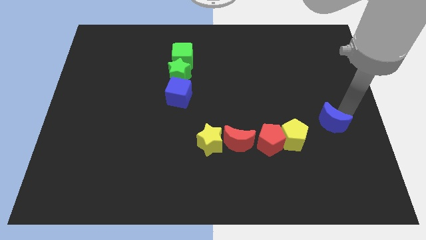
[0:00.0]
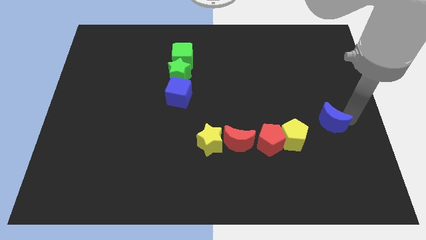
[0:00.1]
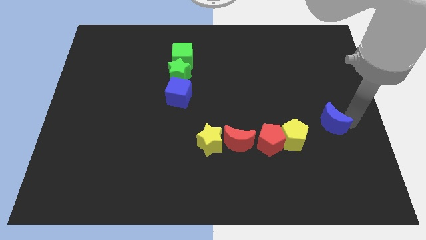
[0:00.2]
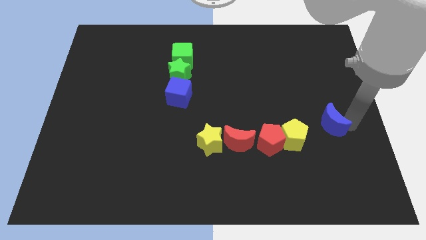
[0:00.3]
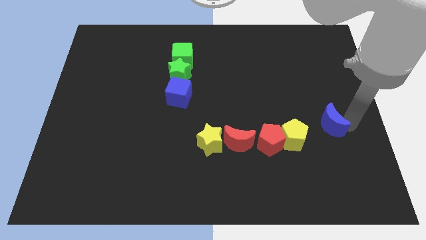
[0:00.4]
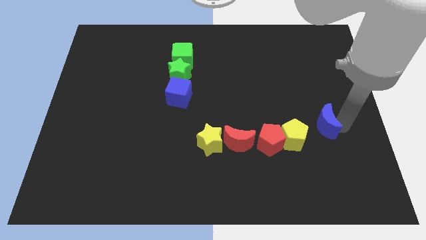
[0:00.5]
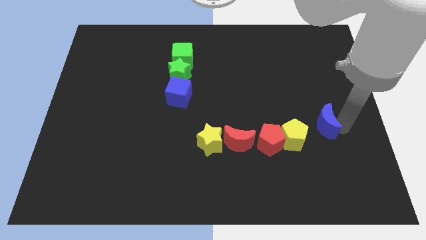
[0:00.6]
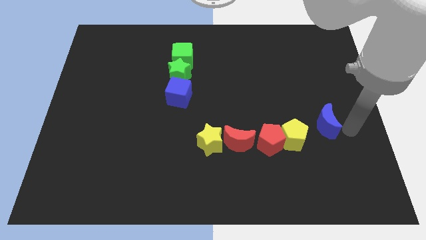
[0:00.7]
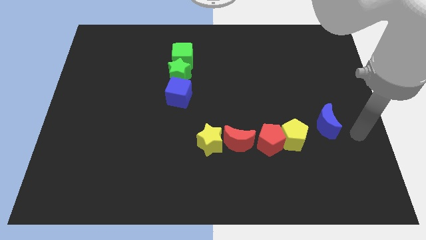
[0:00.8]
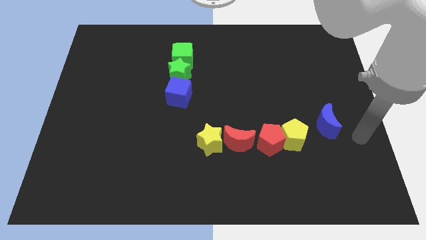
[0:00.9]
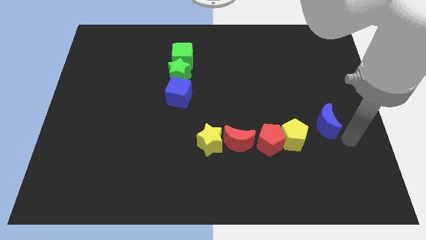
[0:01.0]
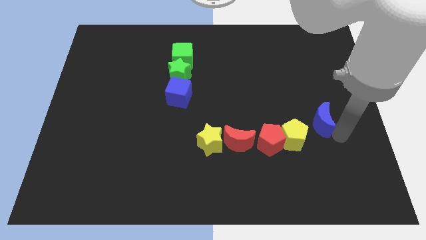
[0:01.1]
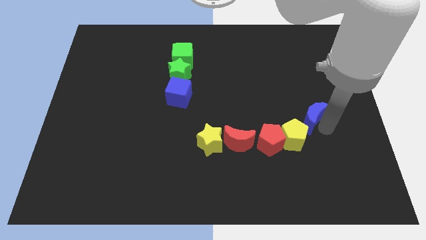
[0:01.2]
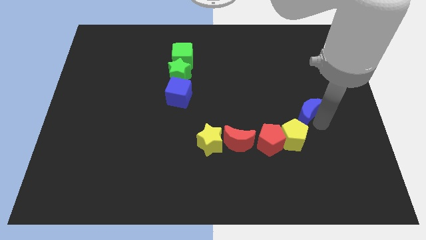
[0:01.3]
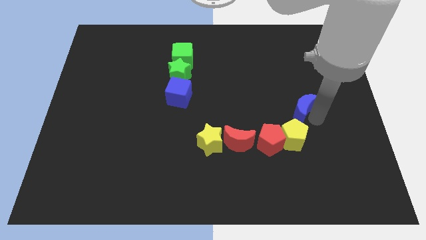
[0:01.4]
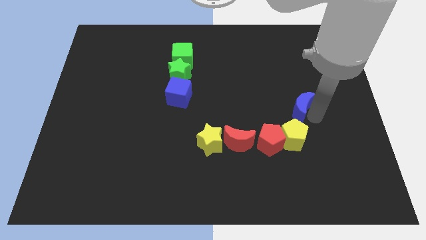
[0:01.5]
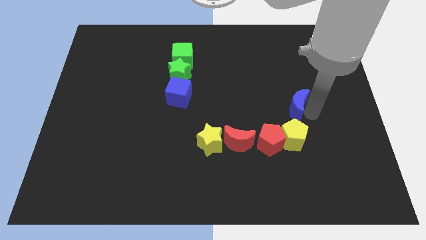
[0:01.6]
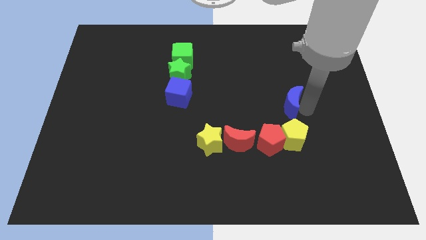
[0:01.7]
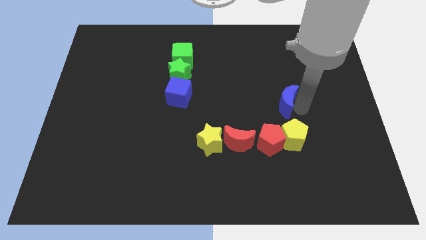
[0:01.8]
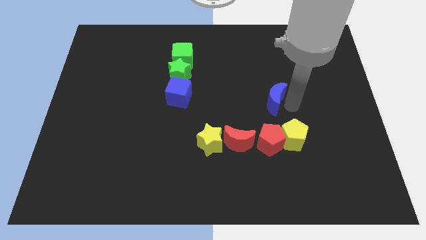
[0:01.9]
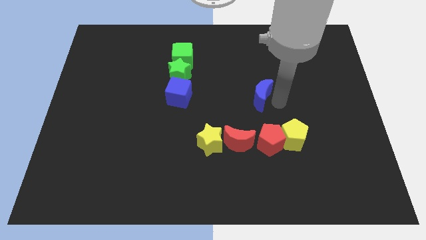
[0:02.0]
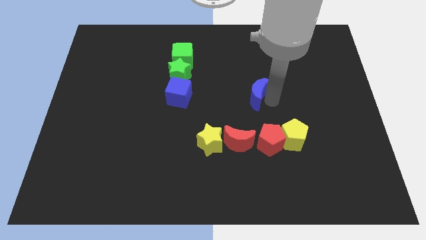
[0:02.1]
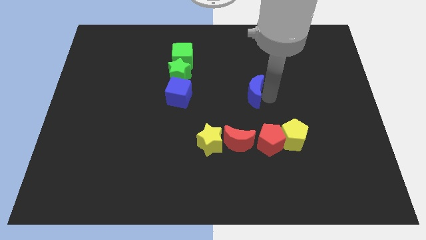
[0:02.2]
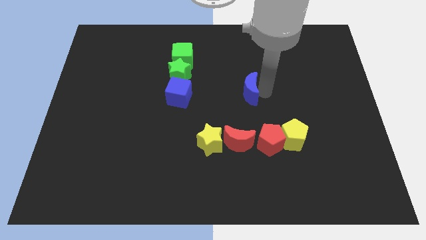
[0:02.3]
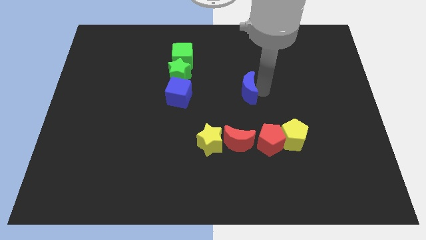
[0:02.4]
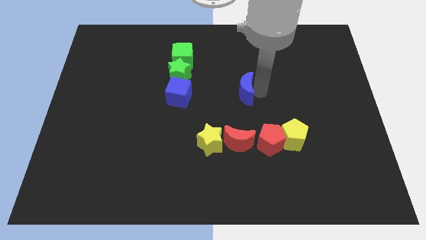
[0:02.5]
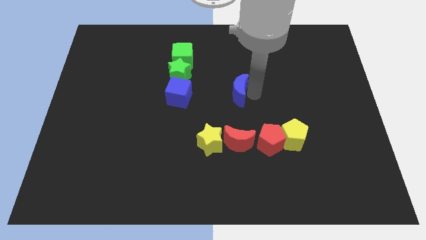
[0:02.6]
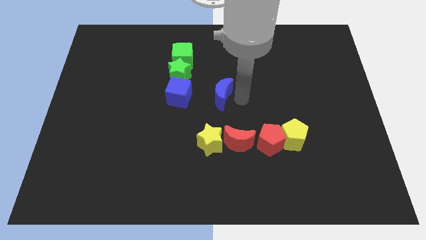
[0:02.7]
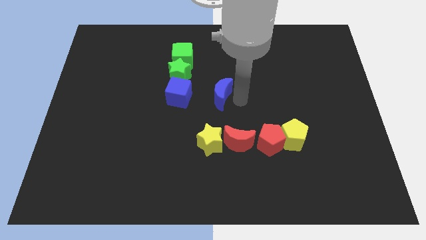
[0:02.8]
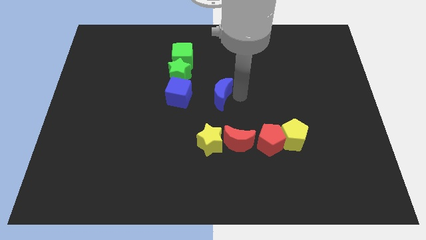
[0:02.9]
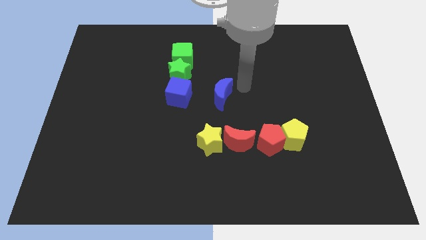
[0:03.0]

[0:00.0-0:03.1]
move the blue crescent to the center of the board

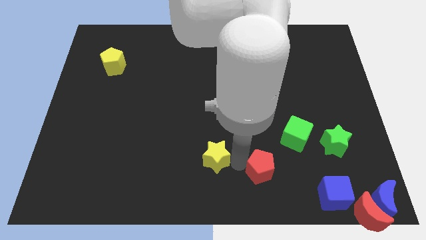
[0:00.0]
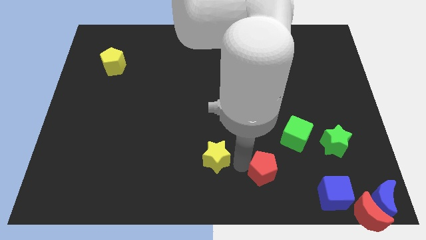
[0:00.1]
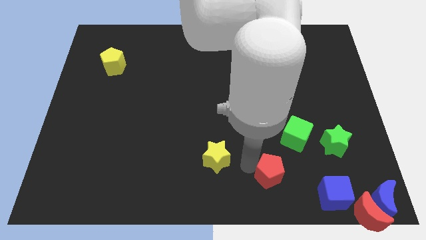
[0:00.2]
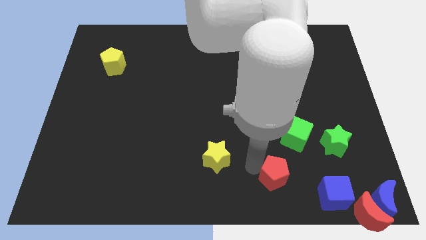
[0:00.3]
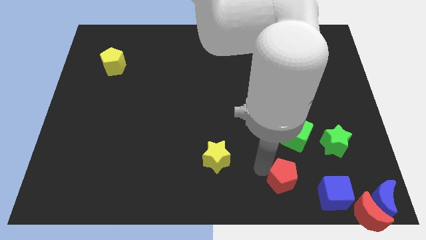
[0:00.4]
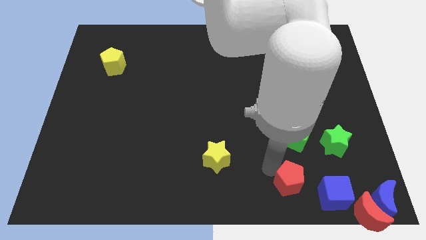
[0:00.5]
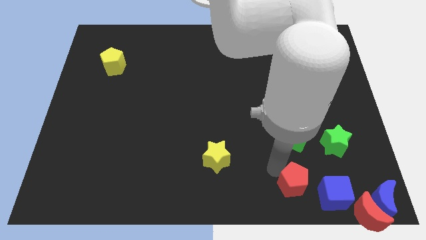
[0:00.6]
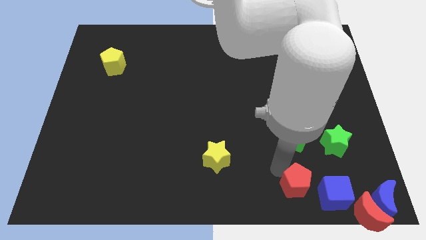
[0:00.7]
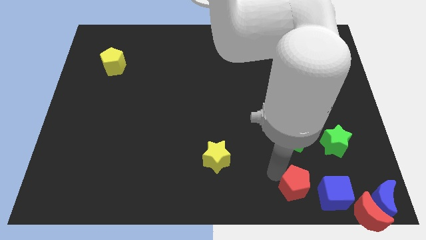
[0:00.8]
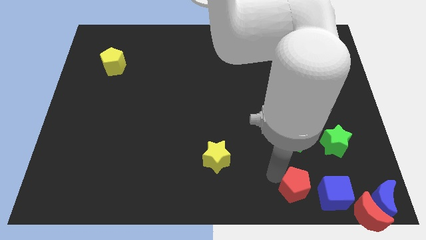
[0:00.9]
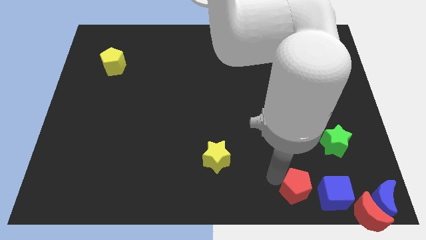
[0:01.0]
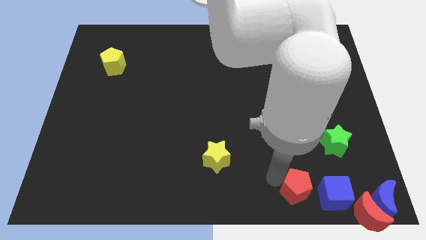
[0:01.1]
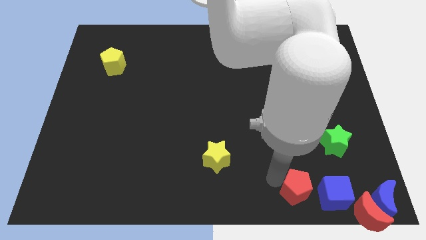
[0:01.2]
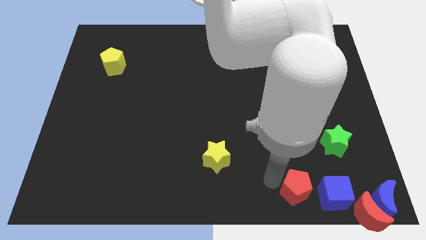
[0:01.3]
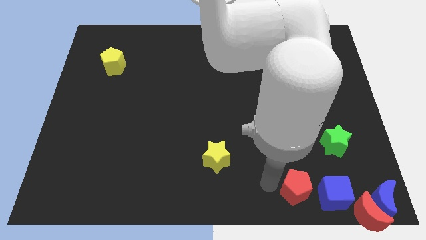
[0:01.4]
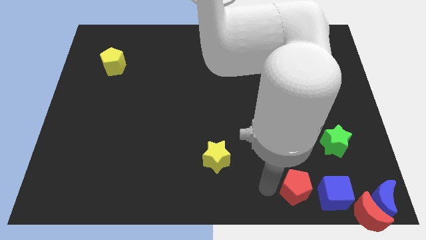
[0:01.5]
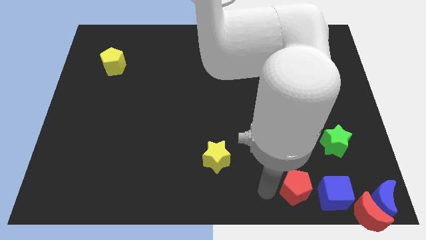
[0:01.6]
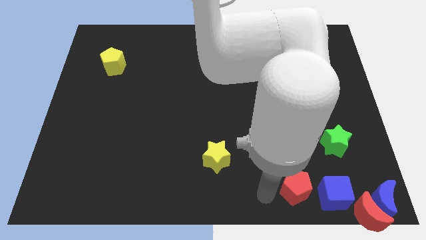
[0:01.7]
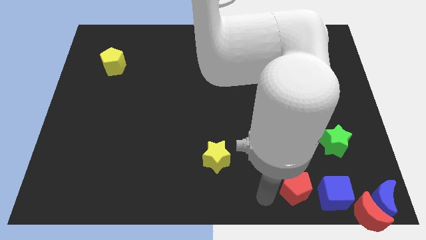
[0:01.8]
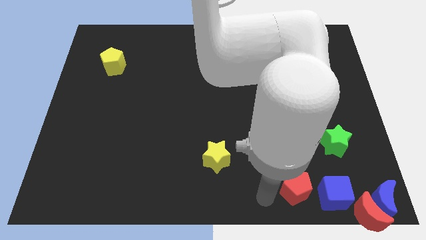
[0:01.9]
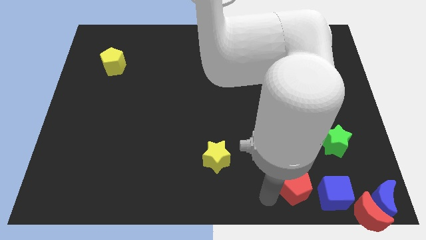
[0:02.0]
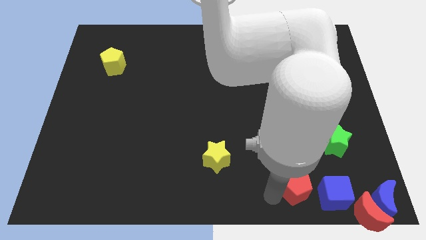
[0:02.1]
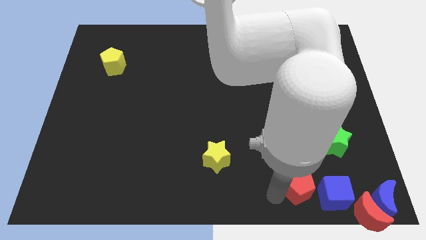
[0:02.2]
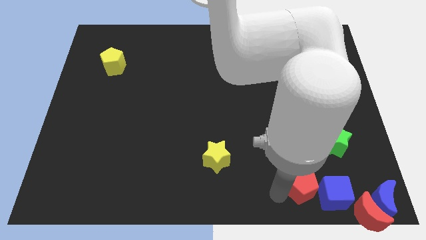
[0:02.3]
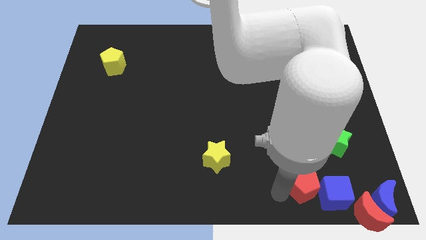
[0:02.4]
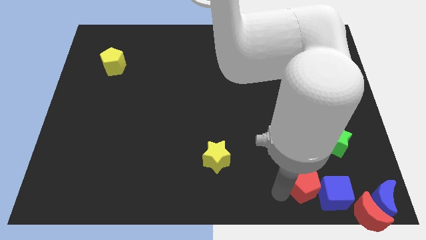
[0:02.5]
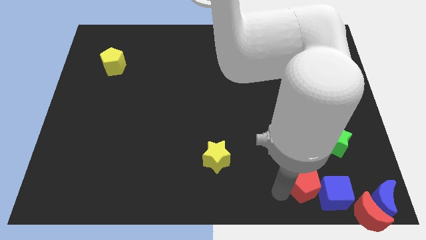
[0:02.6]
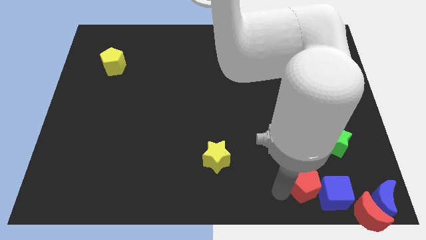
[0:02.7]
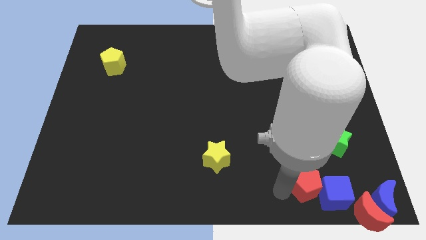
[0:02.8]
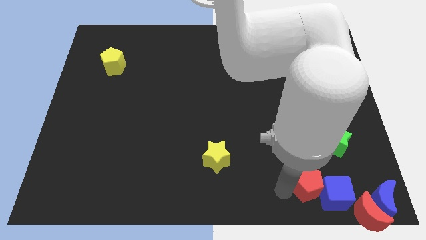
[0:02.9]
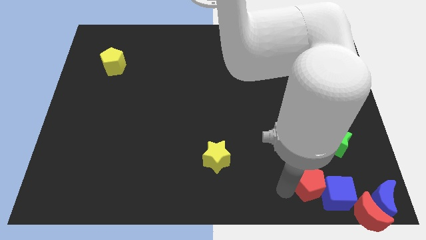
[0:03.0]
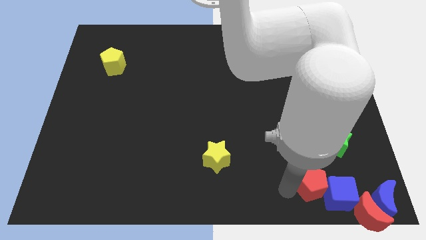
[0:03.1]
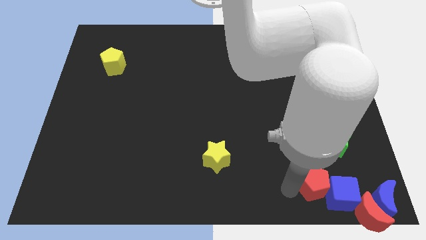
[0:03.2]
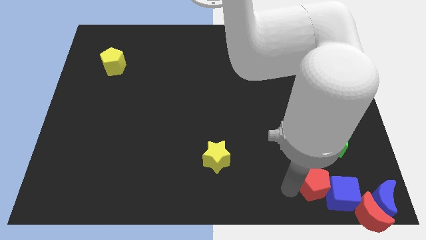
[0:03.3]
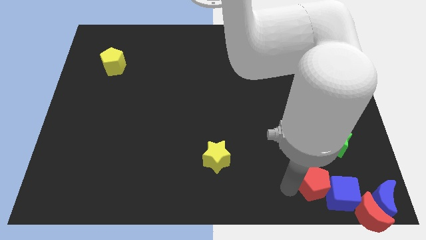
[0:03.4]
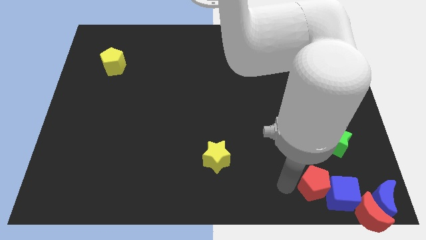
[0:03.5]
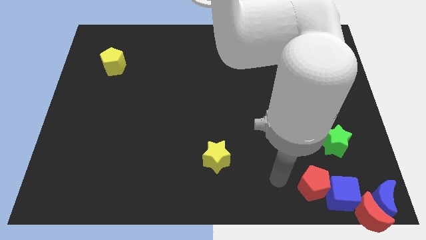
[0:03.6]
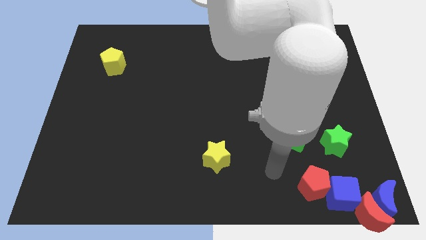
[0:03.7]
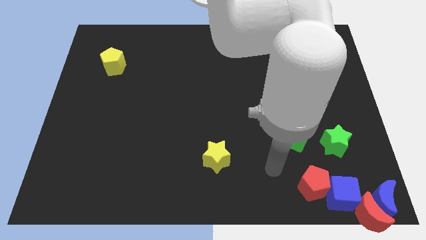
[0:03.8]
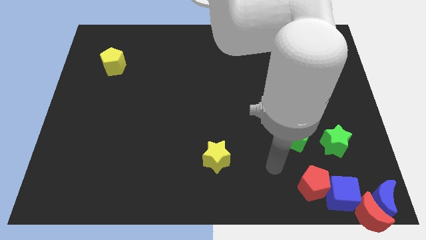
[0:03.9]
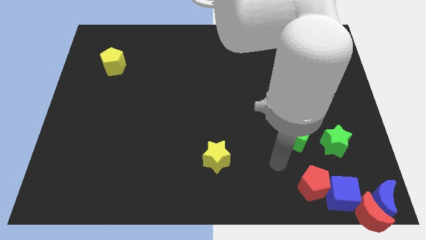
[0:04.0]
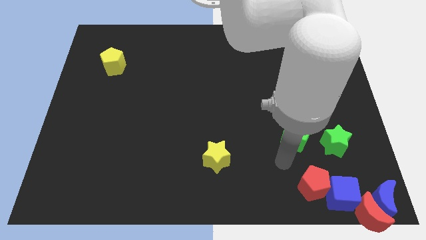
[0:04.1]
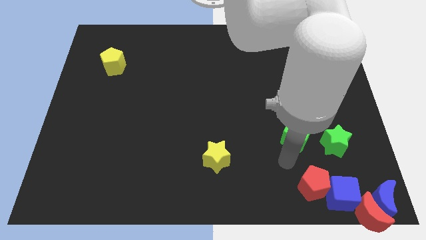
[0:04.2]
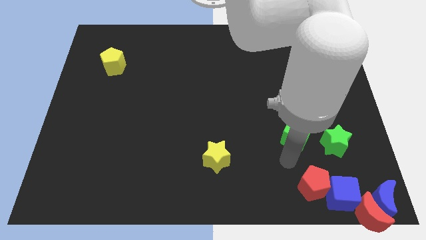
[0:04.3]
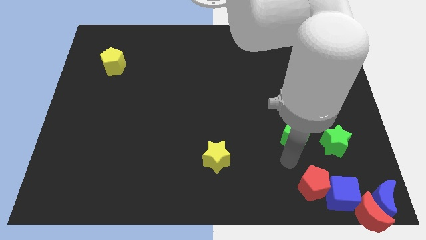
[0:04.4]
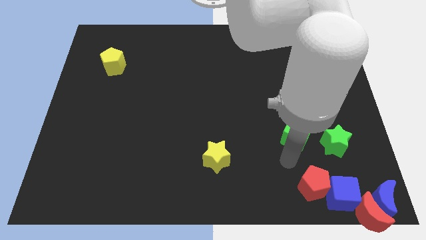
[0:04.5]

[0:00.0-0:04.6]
push the red pentagon into the blue cube

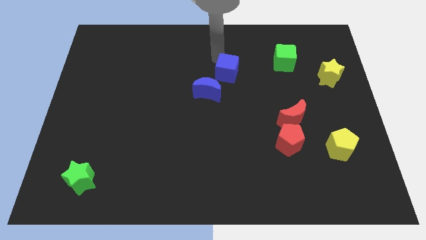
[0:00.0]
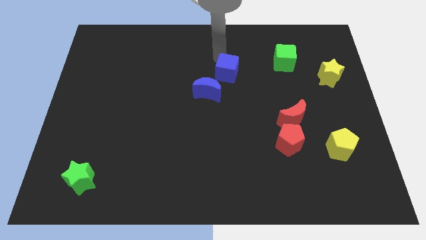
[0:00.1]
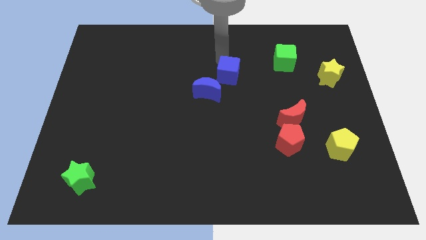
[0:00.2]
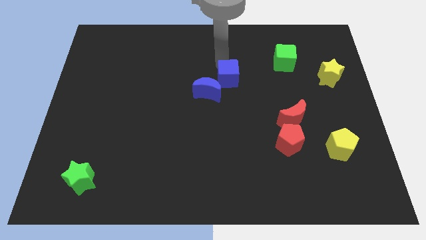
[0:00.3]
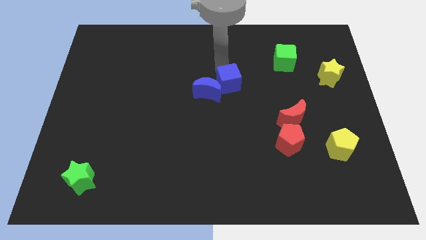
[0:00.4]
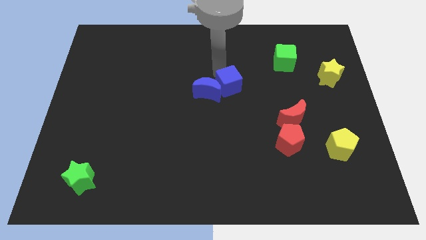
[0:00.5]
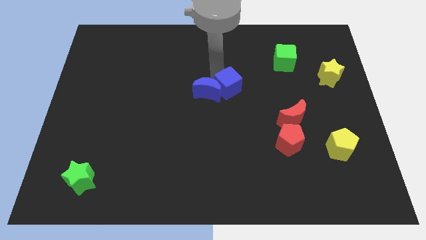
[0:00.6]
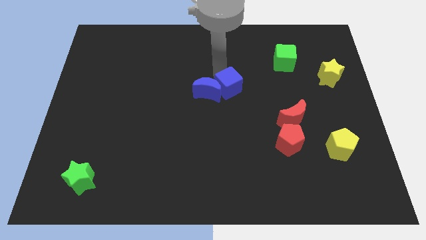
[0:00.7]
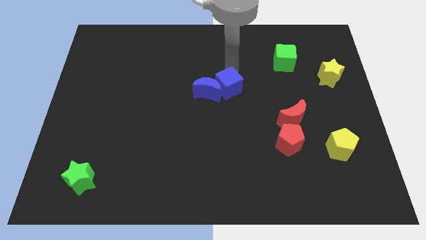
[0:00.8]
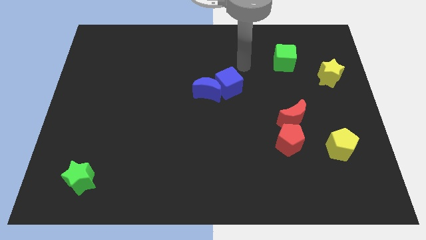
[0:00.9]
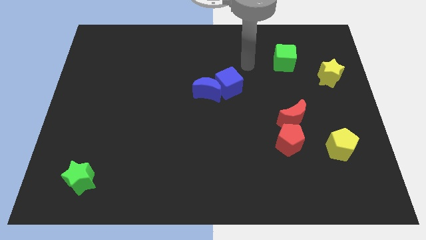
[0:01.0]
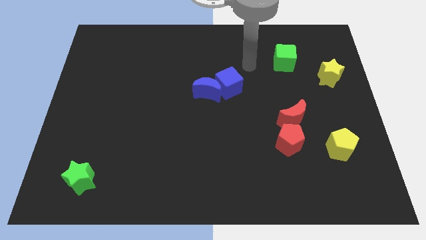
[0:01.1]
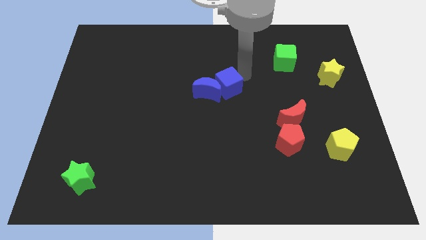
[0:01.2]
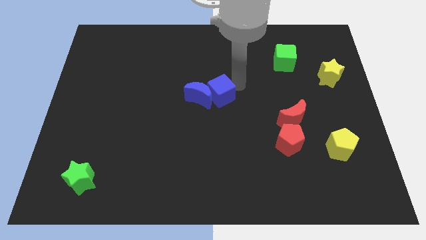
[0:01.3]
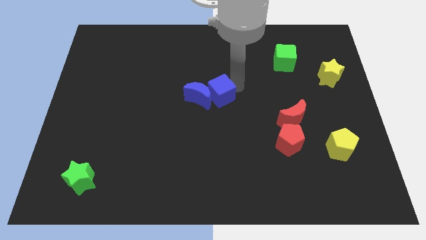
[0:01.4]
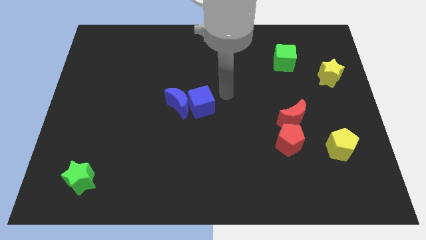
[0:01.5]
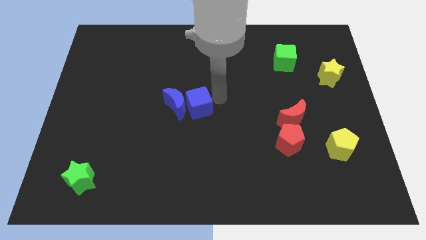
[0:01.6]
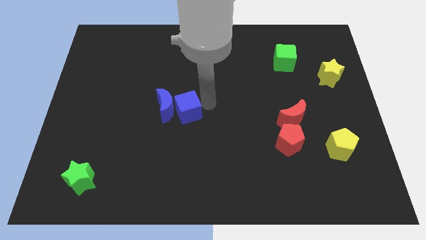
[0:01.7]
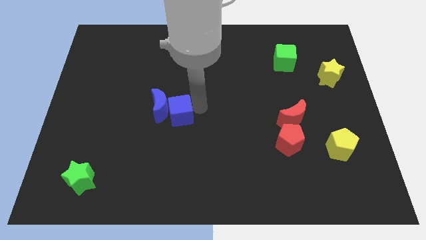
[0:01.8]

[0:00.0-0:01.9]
move the blue cube and blue crescent towards left
